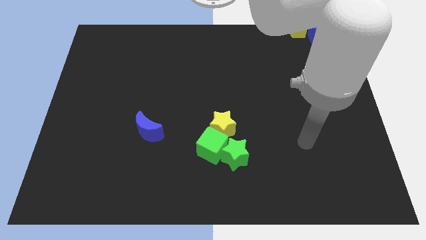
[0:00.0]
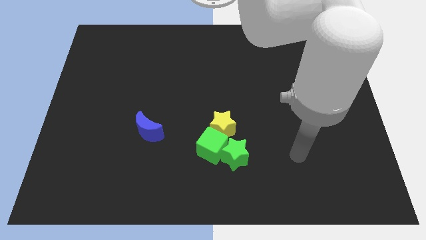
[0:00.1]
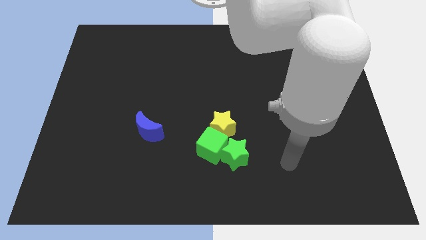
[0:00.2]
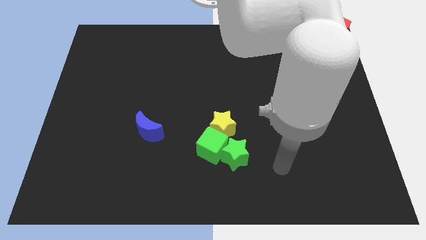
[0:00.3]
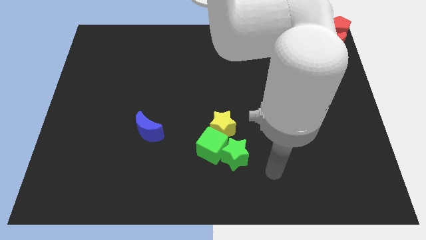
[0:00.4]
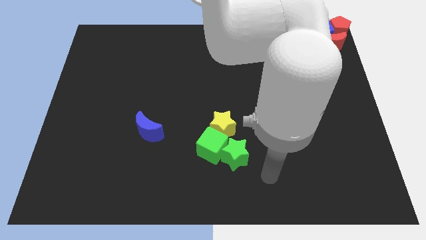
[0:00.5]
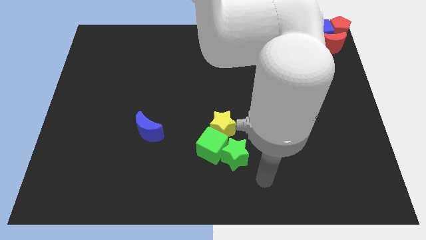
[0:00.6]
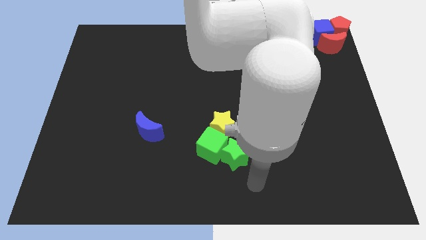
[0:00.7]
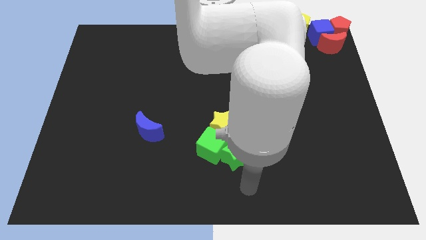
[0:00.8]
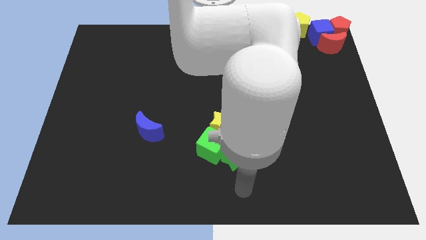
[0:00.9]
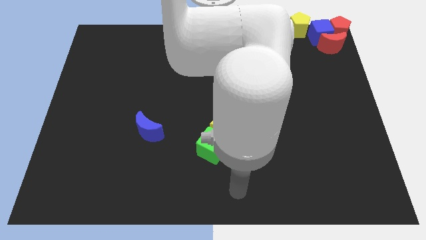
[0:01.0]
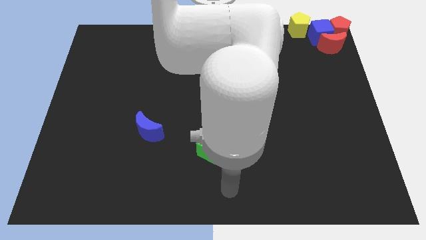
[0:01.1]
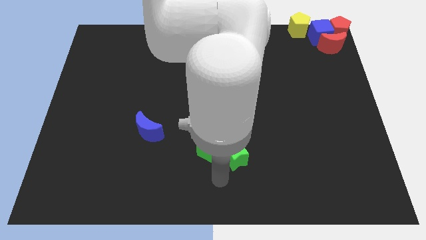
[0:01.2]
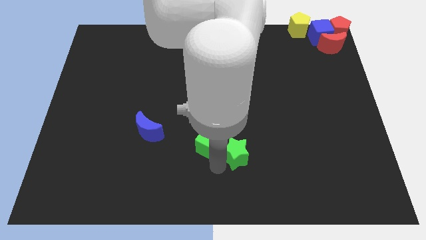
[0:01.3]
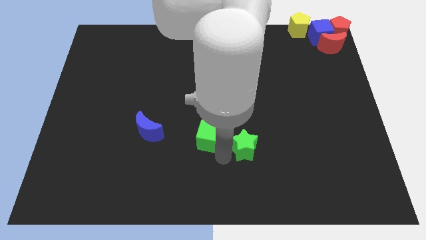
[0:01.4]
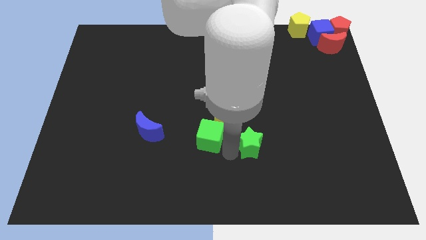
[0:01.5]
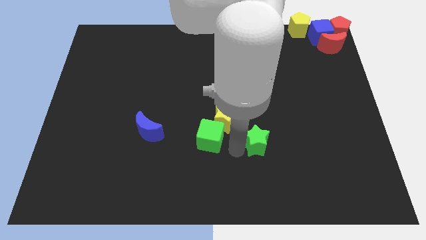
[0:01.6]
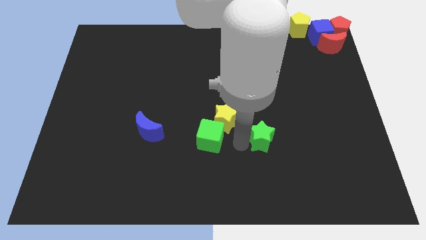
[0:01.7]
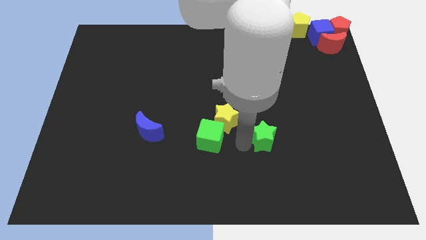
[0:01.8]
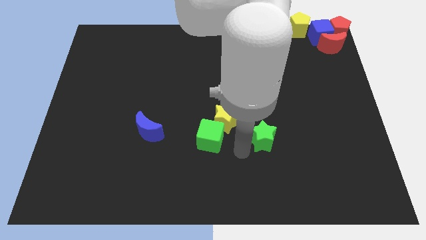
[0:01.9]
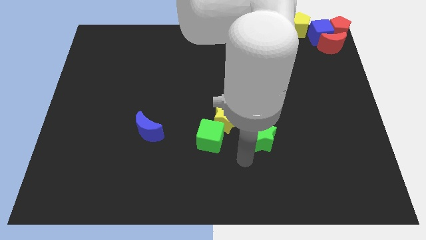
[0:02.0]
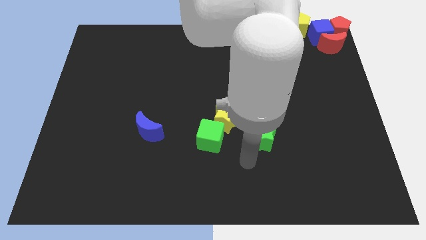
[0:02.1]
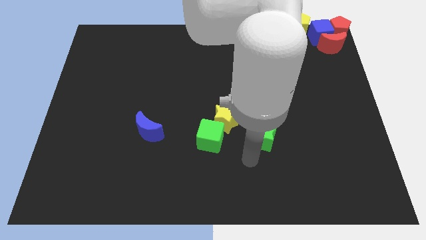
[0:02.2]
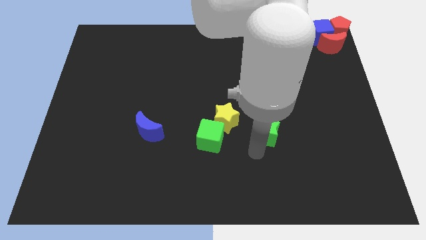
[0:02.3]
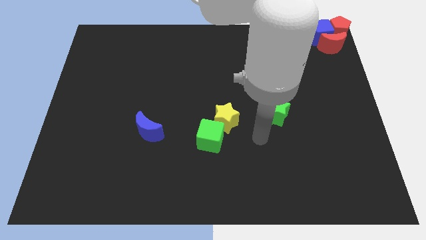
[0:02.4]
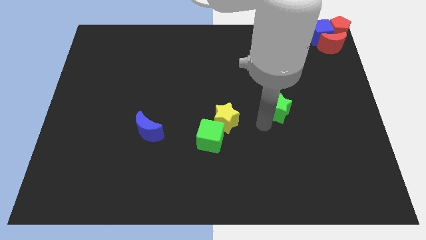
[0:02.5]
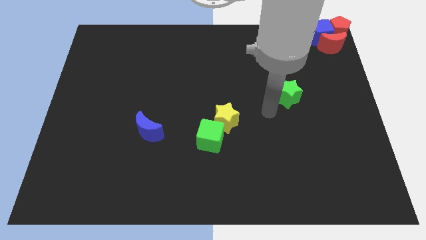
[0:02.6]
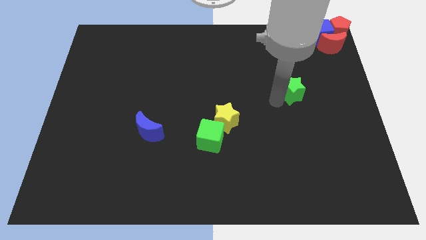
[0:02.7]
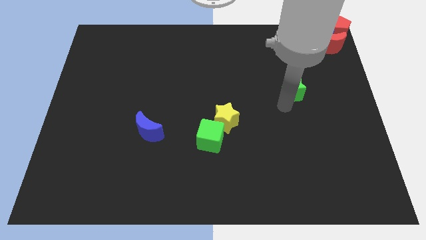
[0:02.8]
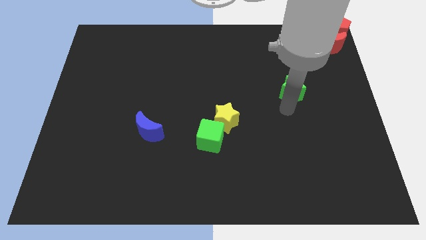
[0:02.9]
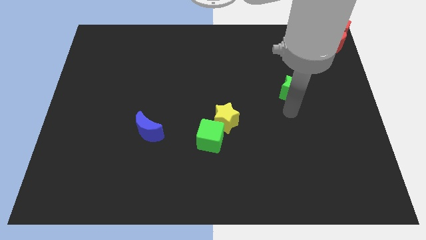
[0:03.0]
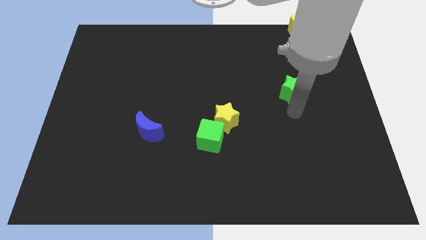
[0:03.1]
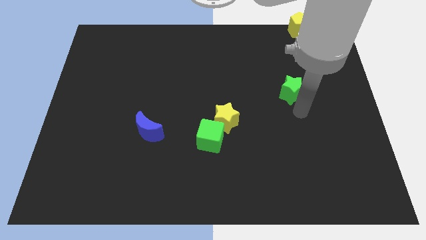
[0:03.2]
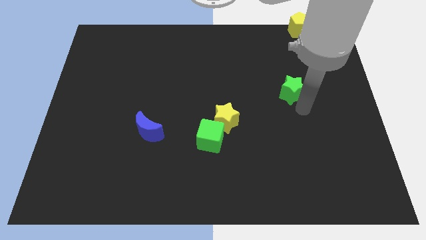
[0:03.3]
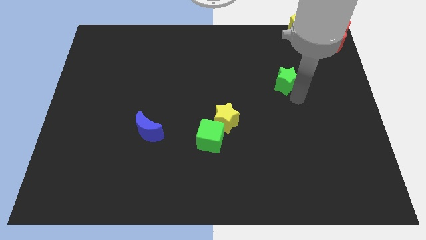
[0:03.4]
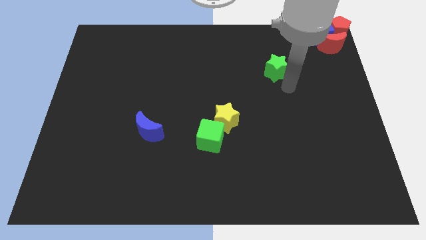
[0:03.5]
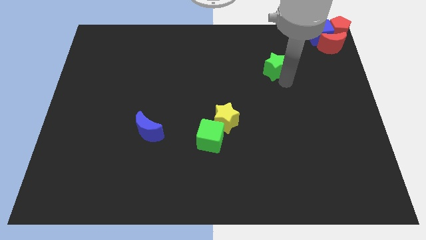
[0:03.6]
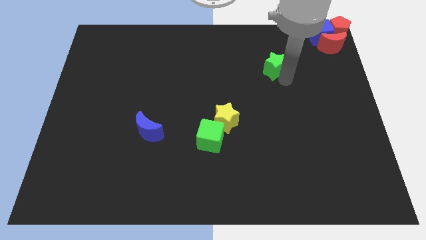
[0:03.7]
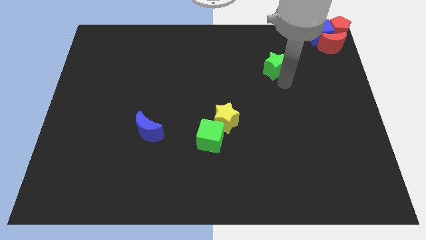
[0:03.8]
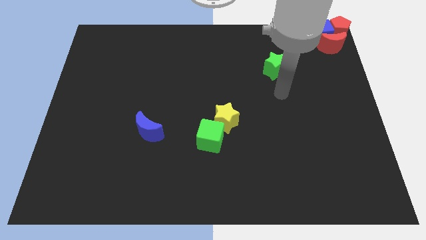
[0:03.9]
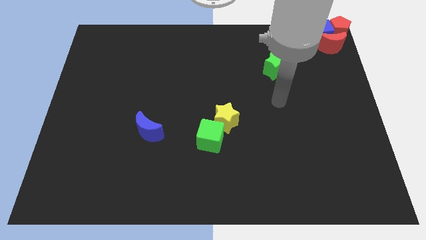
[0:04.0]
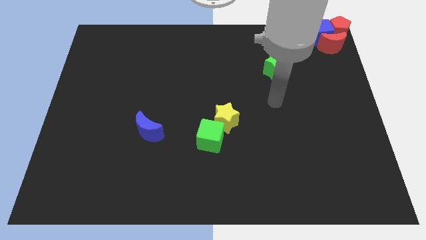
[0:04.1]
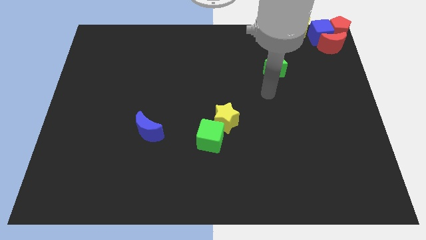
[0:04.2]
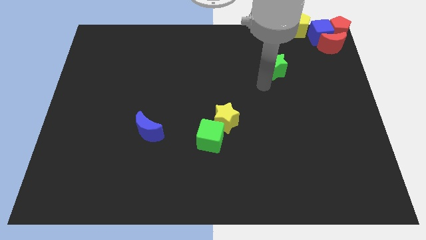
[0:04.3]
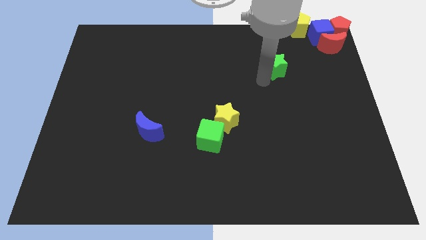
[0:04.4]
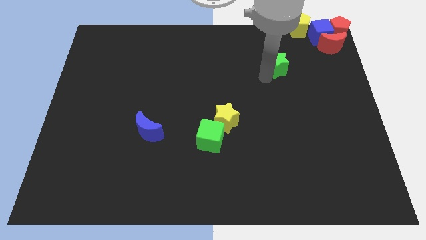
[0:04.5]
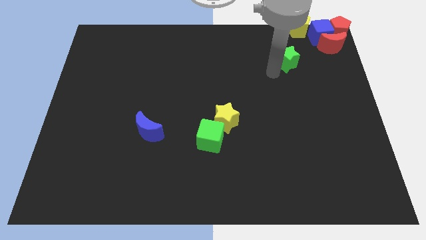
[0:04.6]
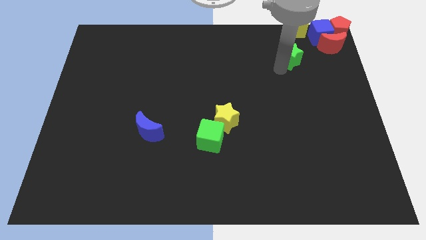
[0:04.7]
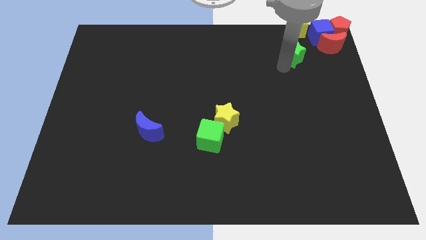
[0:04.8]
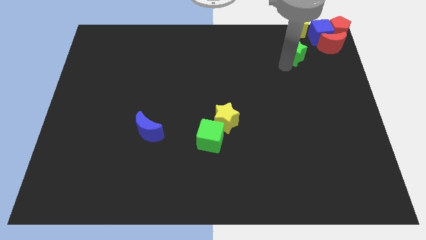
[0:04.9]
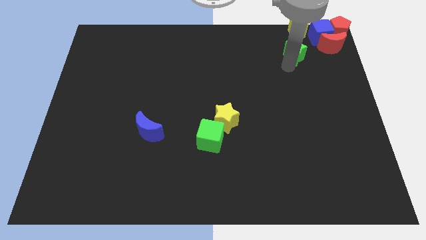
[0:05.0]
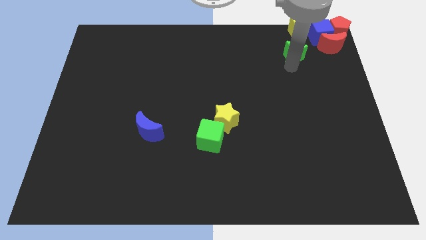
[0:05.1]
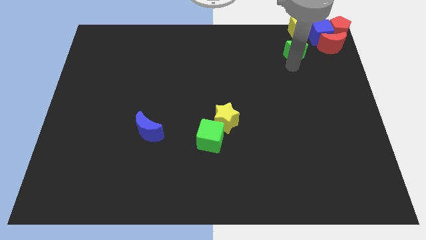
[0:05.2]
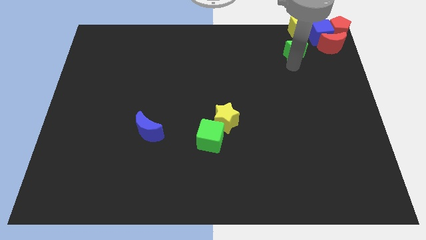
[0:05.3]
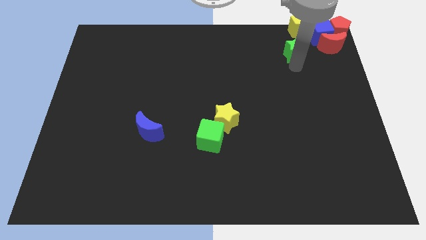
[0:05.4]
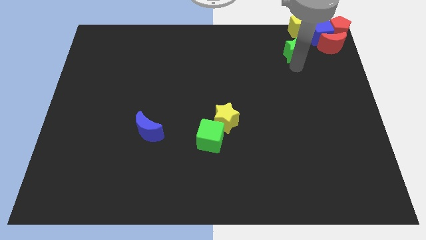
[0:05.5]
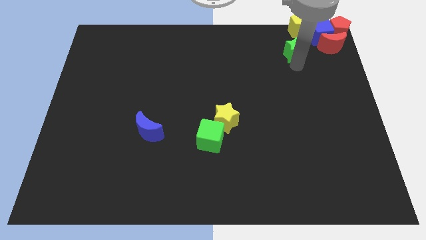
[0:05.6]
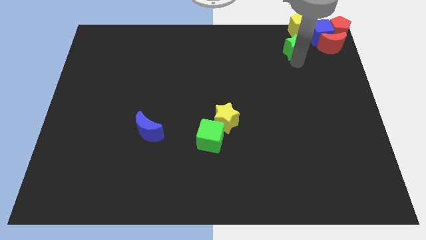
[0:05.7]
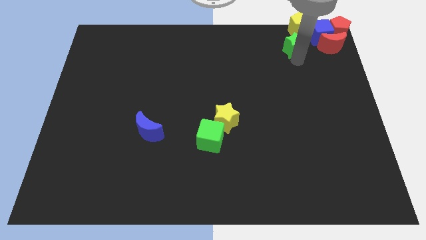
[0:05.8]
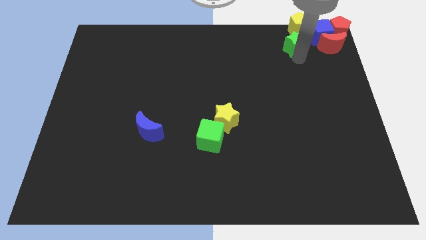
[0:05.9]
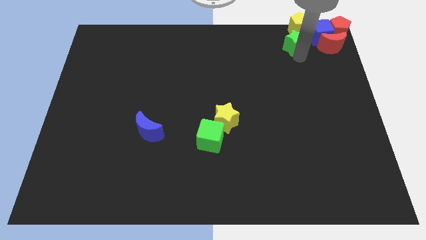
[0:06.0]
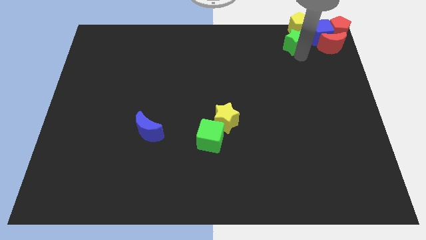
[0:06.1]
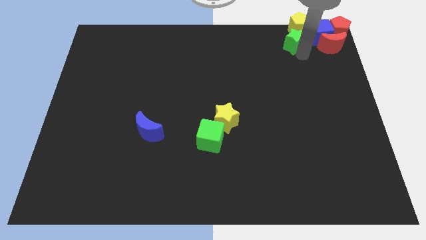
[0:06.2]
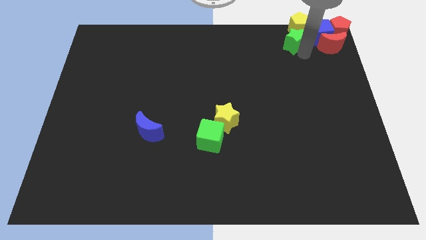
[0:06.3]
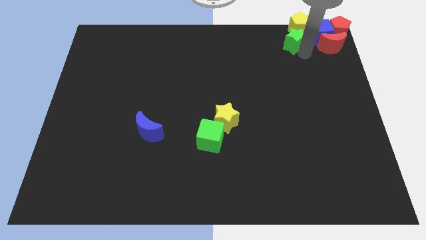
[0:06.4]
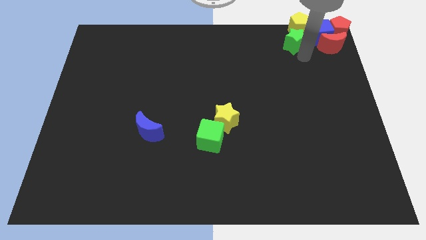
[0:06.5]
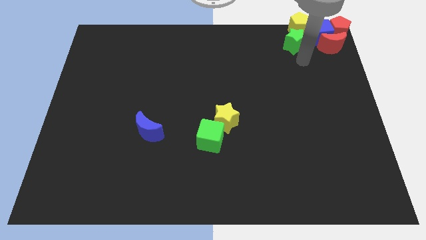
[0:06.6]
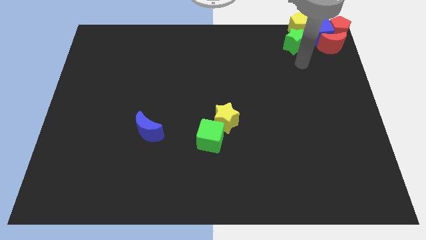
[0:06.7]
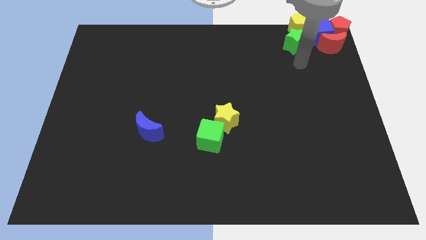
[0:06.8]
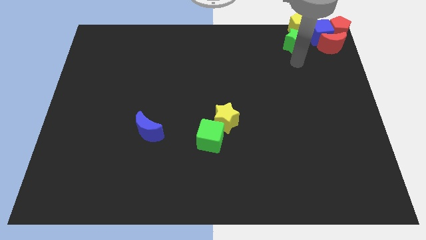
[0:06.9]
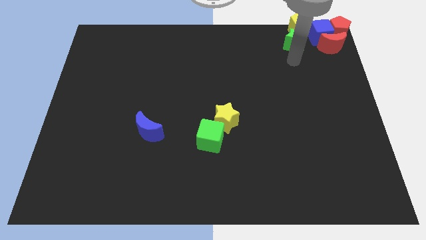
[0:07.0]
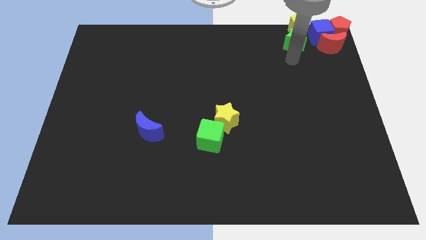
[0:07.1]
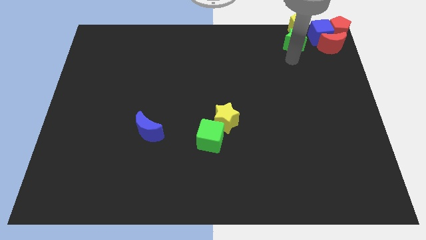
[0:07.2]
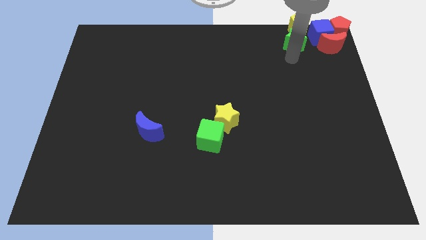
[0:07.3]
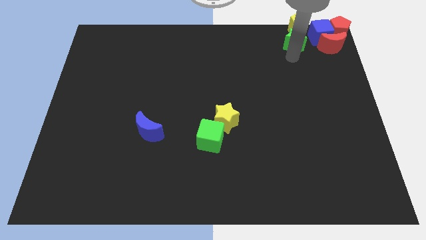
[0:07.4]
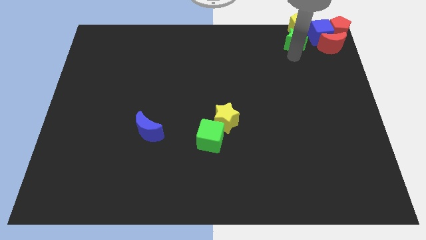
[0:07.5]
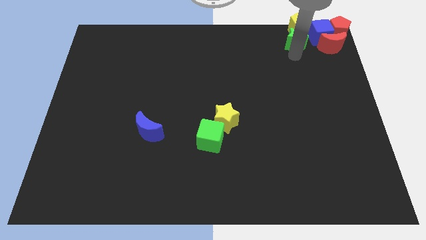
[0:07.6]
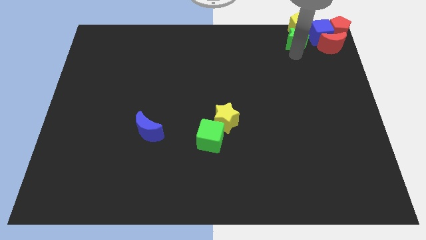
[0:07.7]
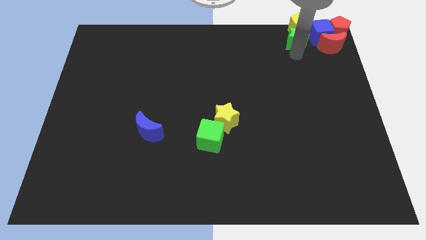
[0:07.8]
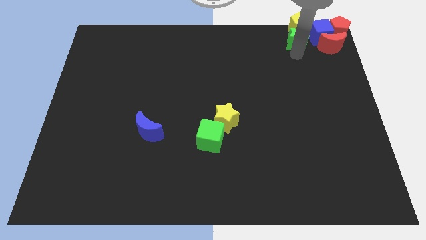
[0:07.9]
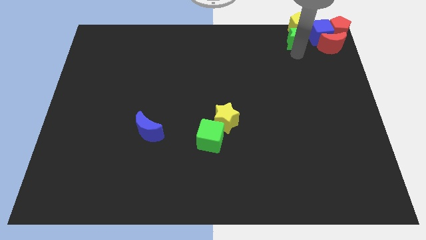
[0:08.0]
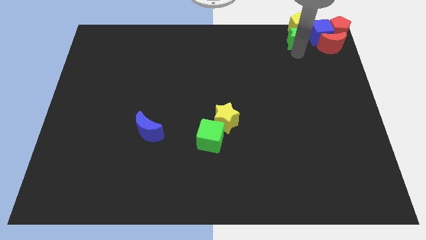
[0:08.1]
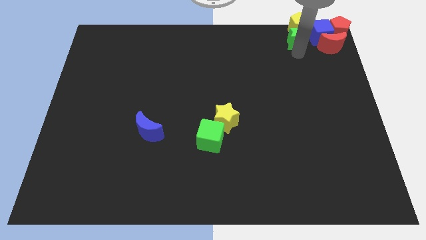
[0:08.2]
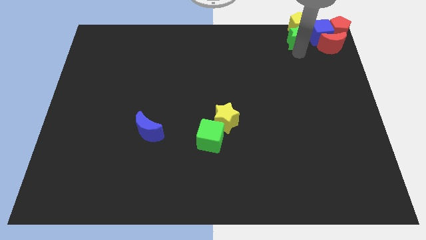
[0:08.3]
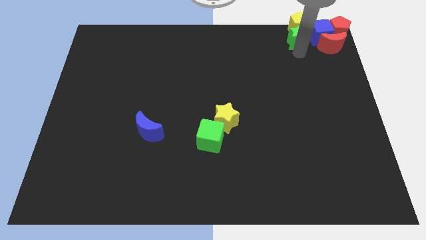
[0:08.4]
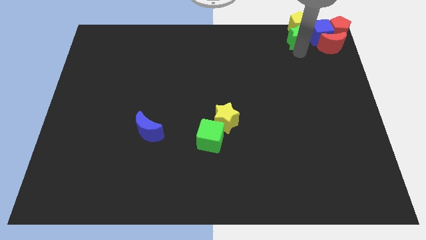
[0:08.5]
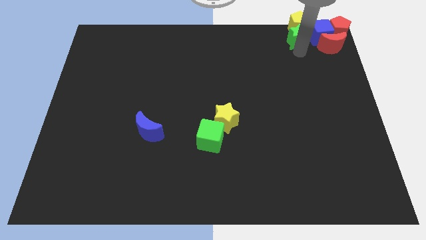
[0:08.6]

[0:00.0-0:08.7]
push the green star into the yellow pentagon

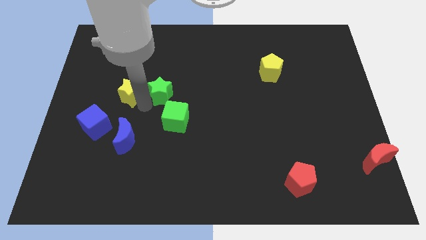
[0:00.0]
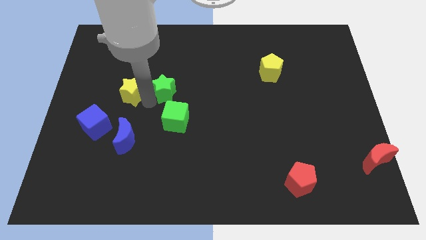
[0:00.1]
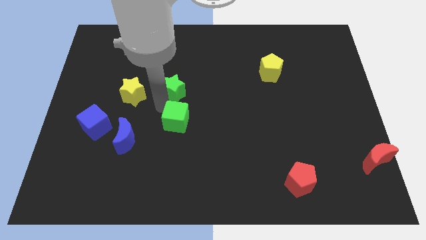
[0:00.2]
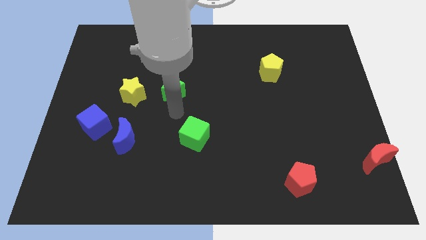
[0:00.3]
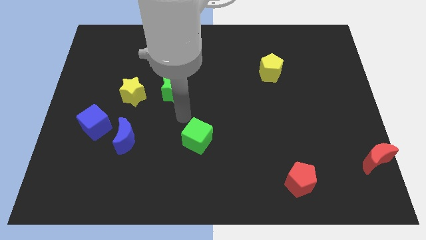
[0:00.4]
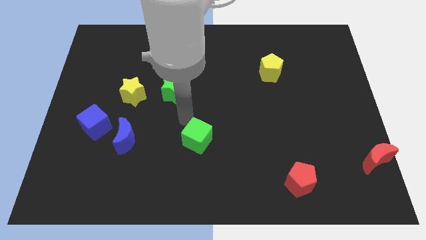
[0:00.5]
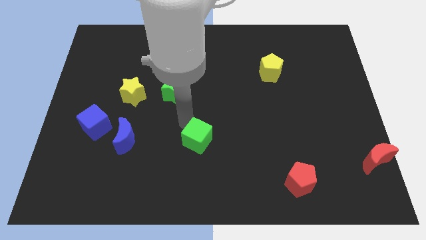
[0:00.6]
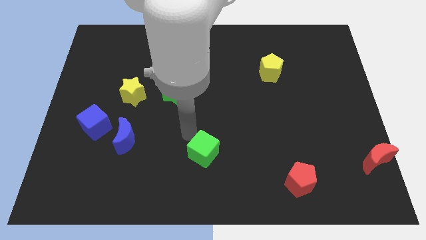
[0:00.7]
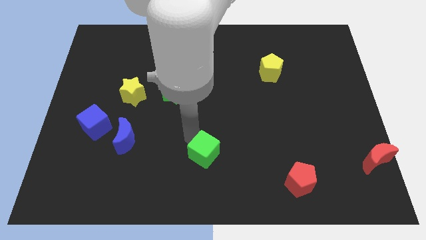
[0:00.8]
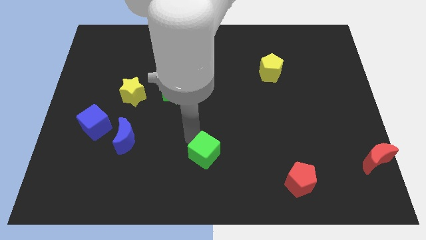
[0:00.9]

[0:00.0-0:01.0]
separate the green cube from the green star
